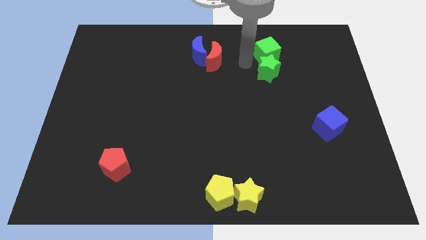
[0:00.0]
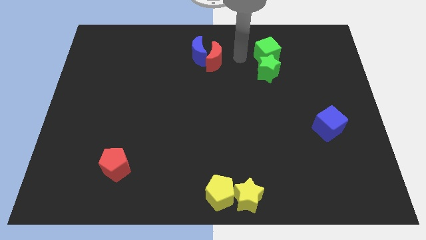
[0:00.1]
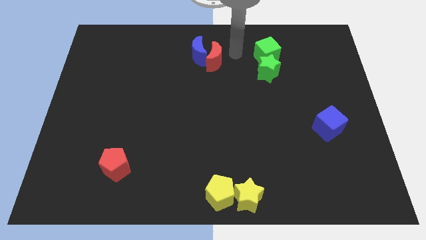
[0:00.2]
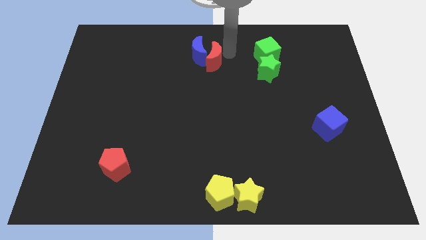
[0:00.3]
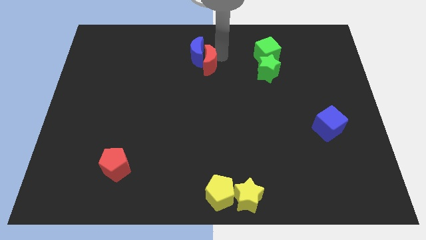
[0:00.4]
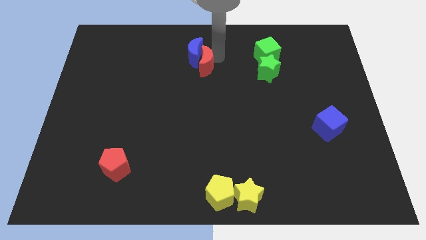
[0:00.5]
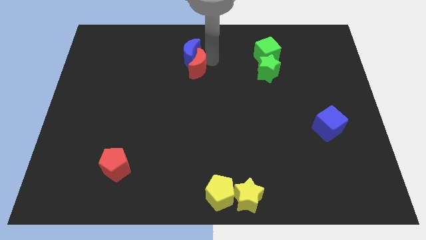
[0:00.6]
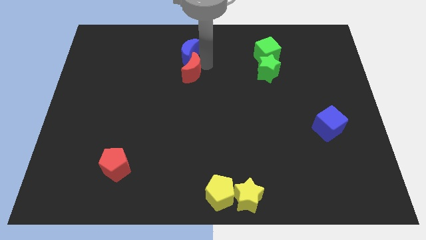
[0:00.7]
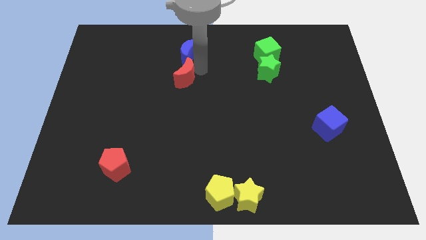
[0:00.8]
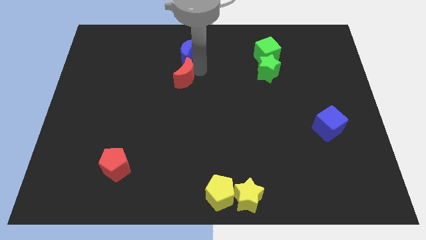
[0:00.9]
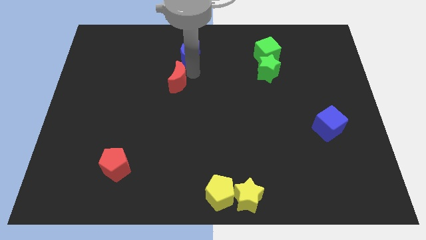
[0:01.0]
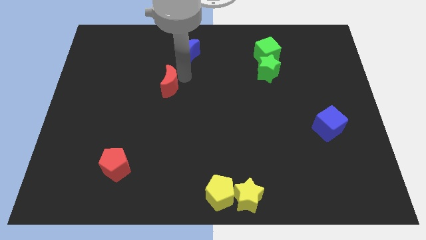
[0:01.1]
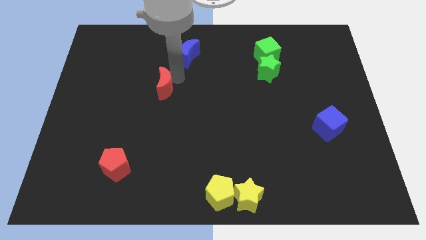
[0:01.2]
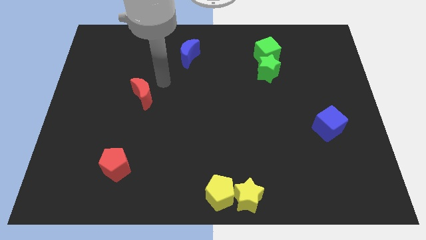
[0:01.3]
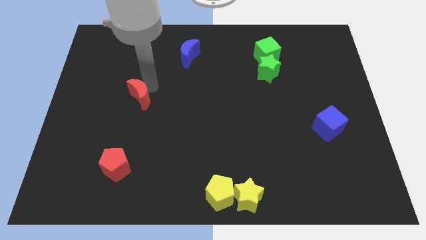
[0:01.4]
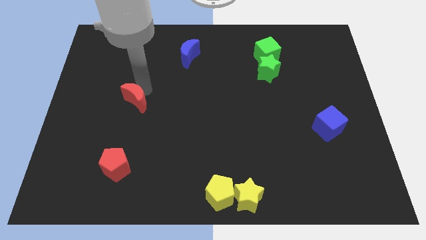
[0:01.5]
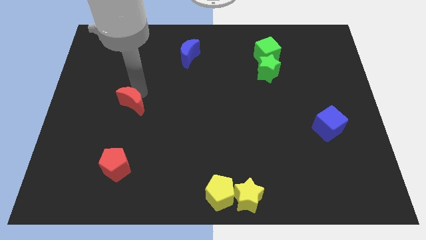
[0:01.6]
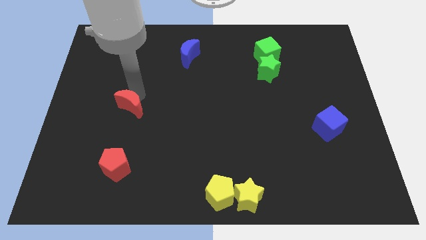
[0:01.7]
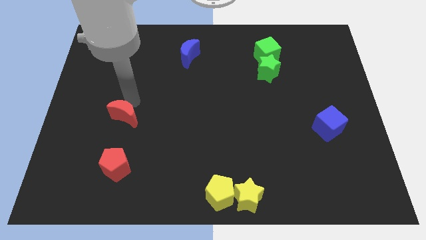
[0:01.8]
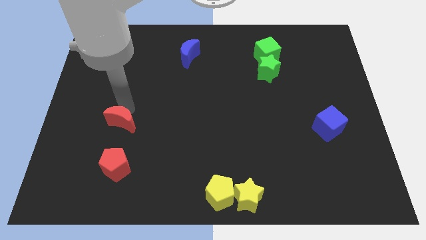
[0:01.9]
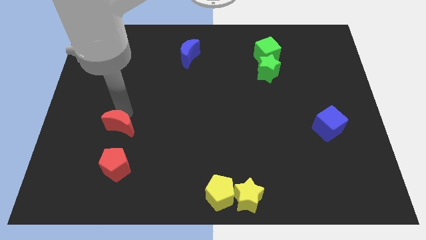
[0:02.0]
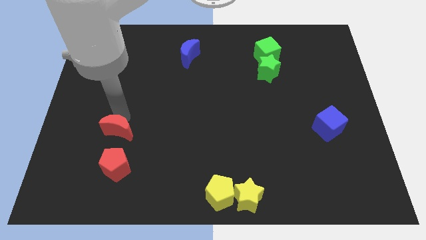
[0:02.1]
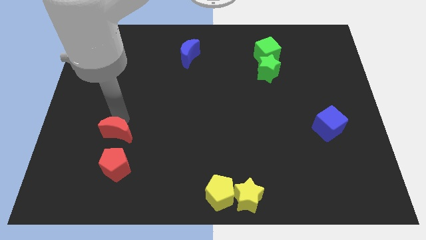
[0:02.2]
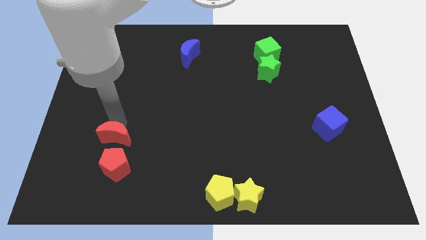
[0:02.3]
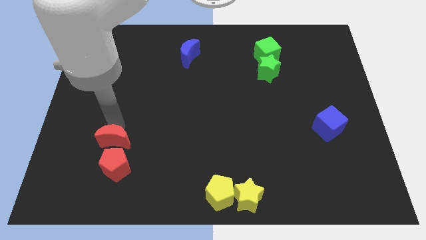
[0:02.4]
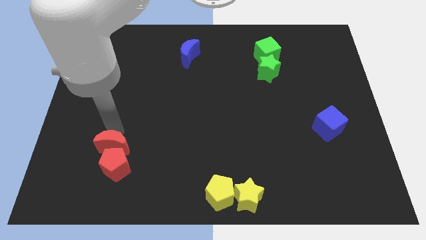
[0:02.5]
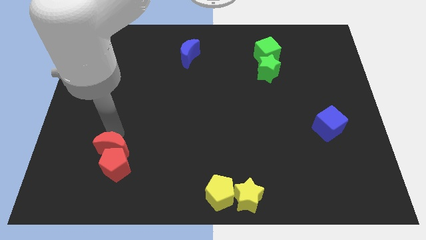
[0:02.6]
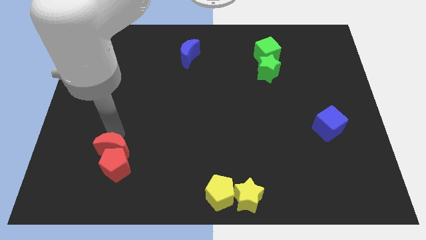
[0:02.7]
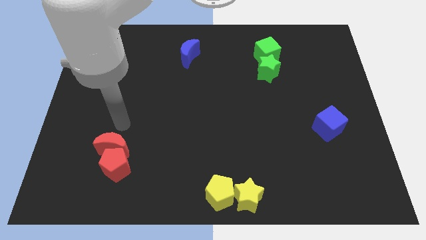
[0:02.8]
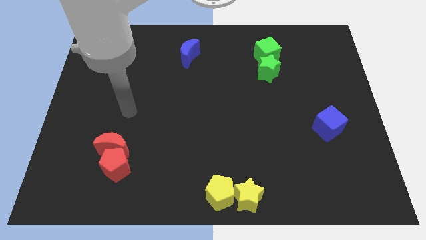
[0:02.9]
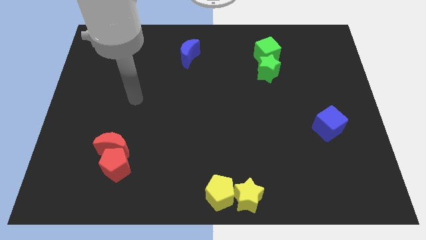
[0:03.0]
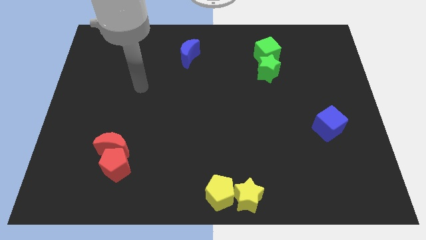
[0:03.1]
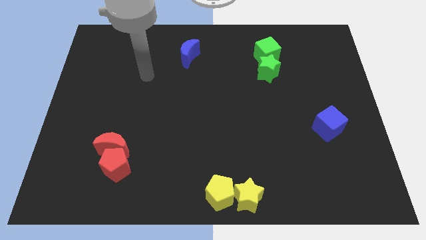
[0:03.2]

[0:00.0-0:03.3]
push the red crescent into the red pentagon

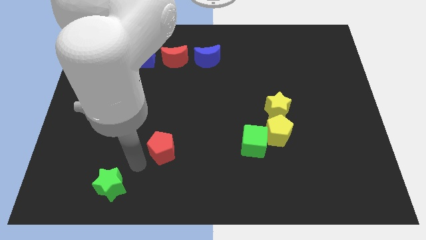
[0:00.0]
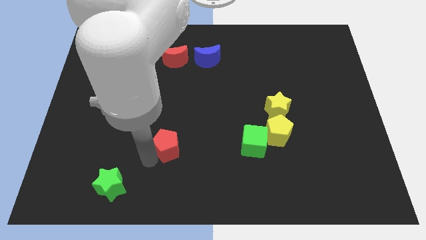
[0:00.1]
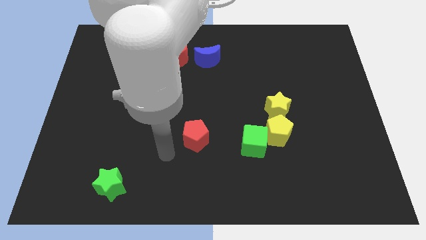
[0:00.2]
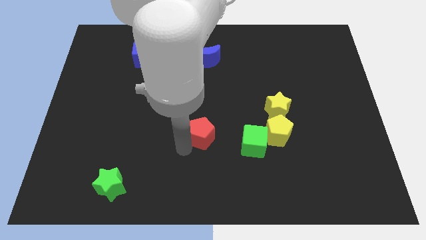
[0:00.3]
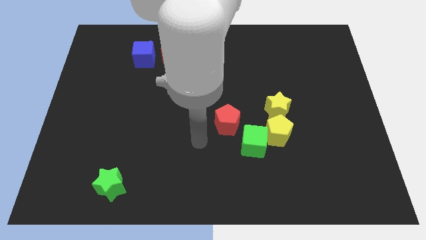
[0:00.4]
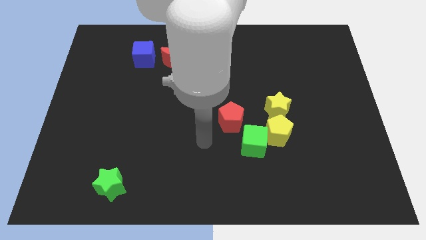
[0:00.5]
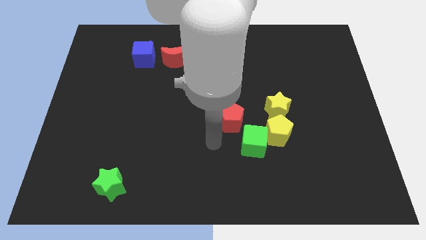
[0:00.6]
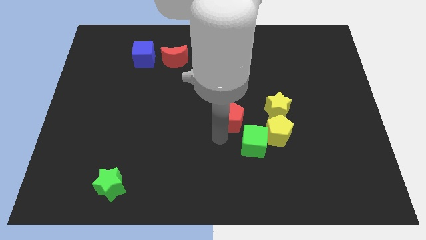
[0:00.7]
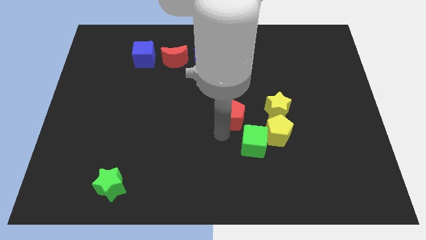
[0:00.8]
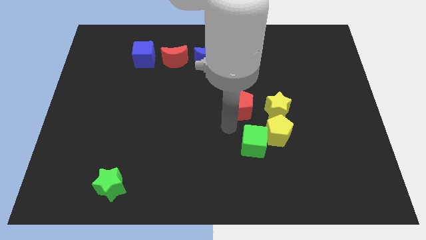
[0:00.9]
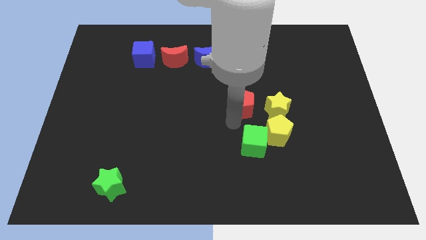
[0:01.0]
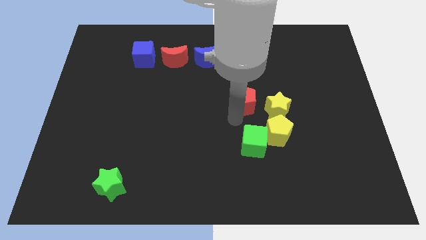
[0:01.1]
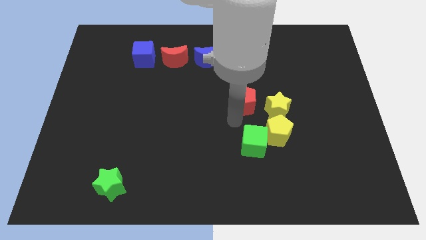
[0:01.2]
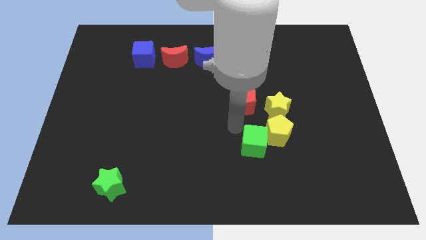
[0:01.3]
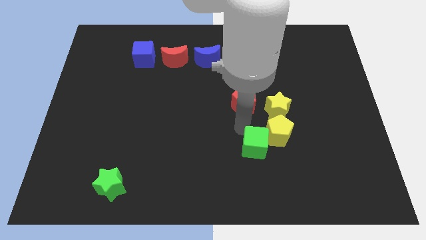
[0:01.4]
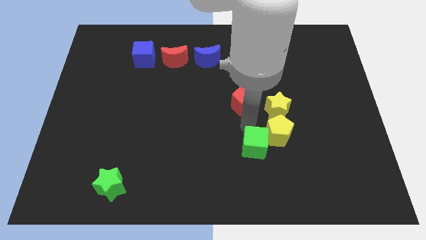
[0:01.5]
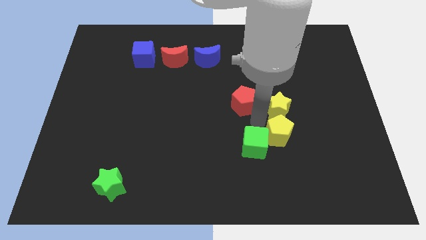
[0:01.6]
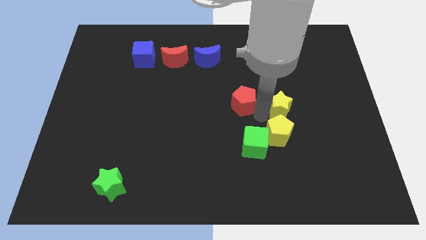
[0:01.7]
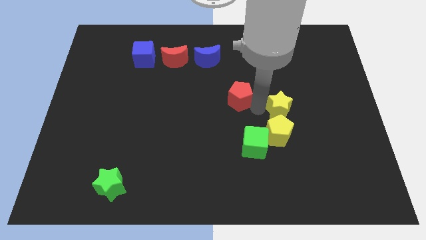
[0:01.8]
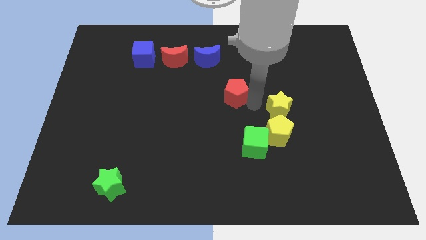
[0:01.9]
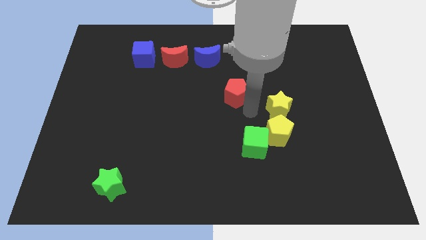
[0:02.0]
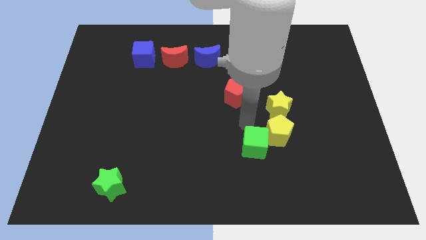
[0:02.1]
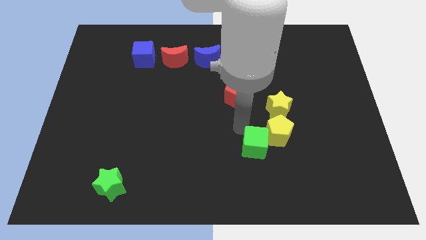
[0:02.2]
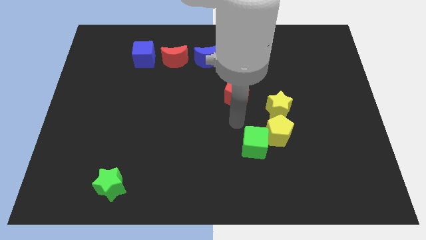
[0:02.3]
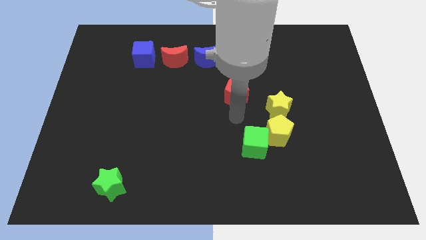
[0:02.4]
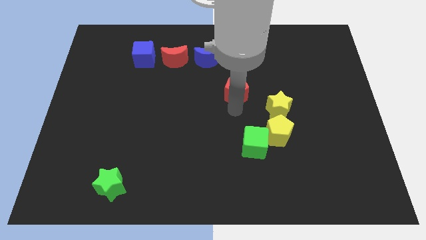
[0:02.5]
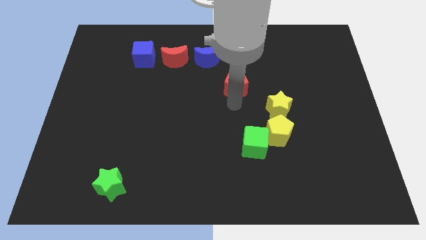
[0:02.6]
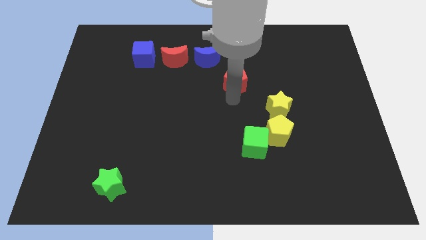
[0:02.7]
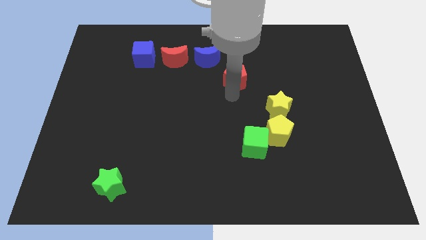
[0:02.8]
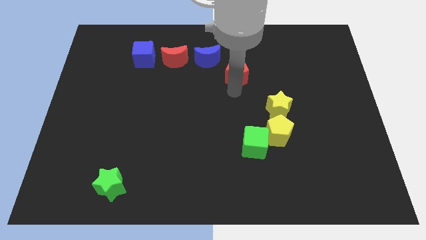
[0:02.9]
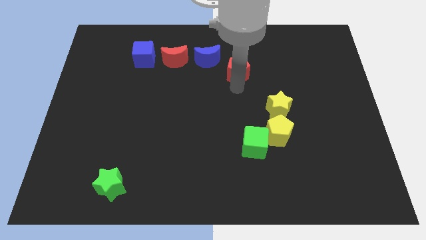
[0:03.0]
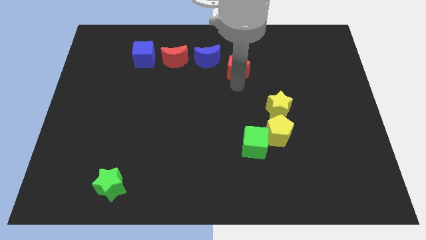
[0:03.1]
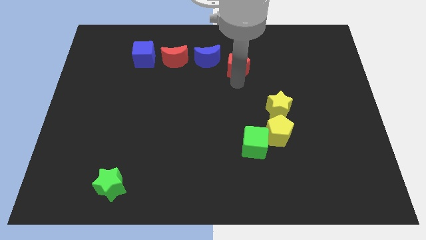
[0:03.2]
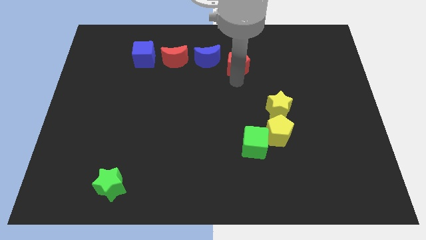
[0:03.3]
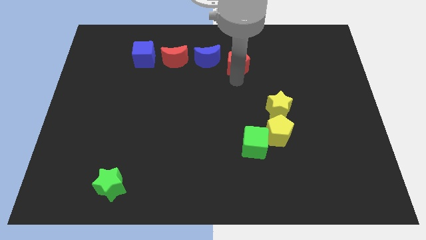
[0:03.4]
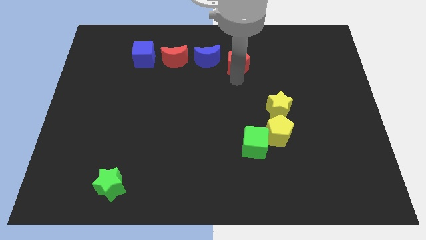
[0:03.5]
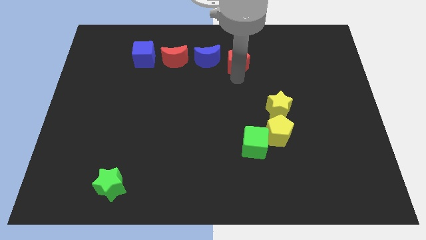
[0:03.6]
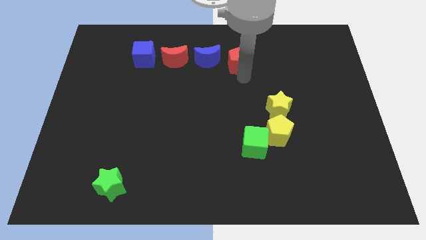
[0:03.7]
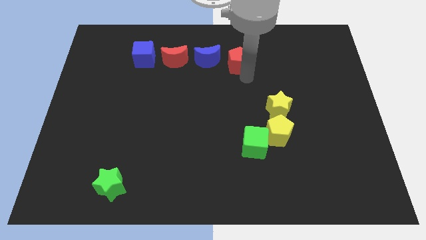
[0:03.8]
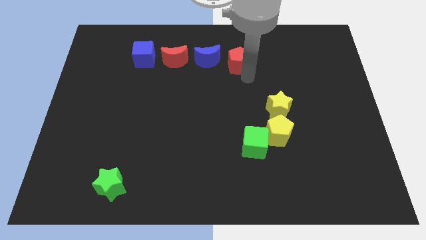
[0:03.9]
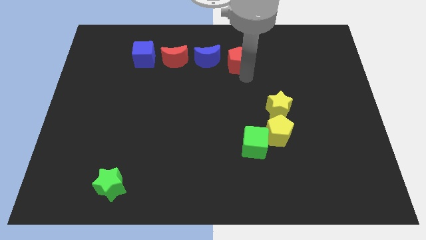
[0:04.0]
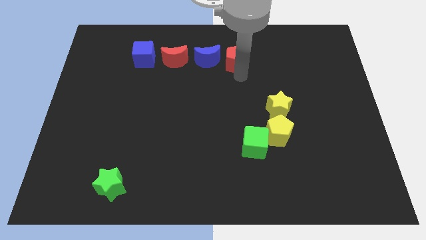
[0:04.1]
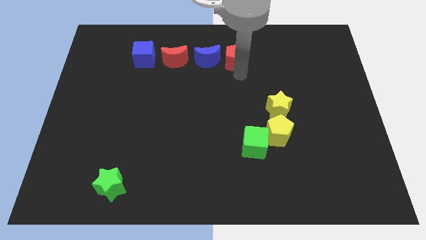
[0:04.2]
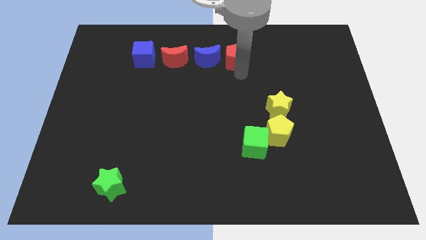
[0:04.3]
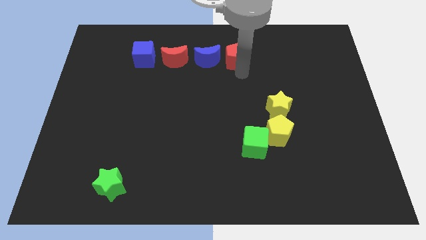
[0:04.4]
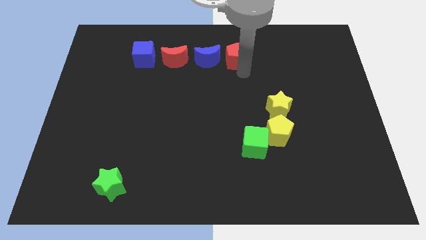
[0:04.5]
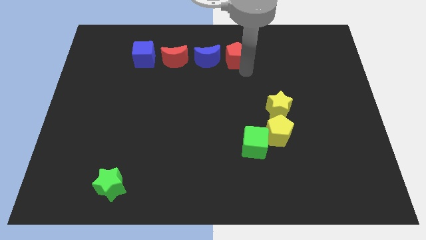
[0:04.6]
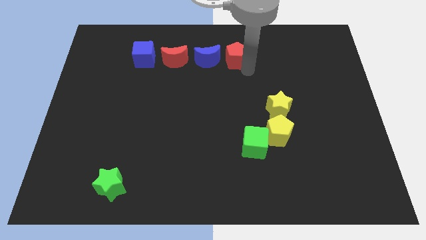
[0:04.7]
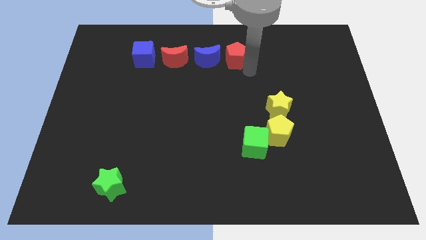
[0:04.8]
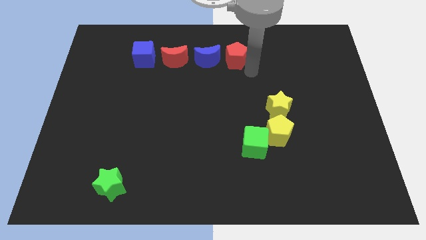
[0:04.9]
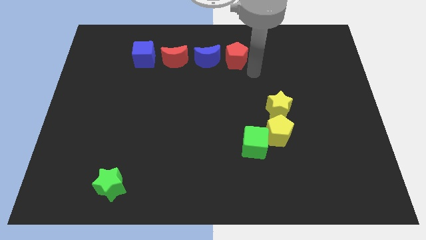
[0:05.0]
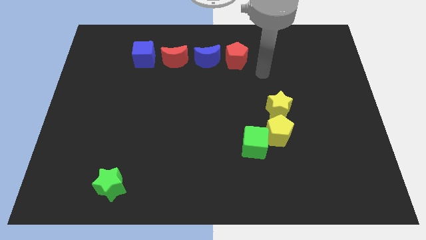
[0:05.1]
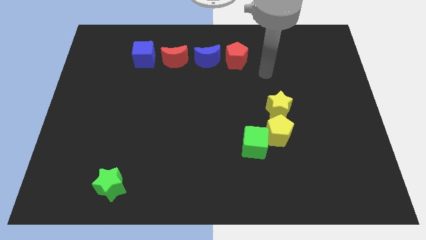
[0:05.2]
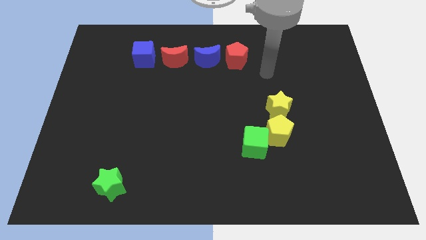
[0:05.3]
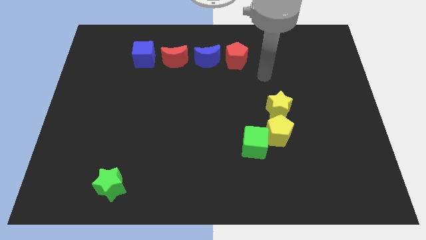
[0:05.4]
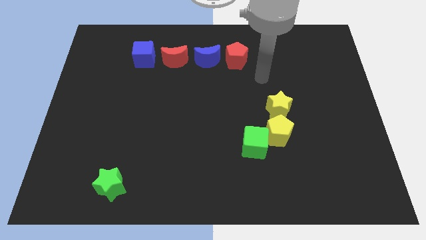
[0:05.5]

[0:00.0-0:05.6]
adjust the red pentagon to form a horizontal line with blue blocks and the red crescent

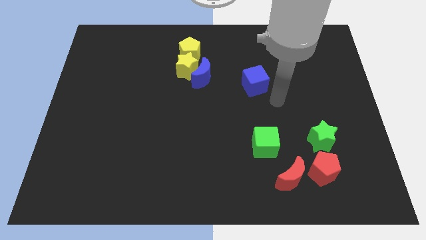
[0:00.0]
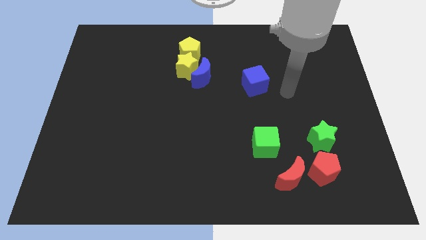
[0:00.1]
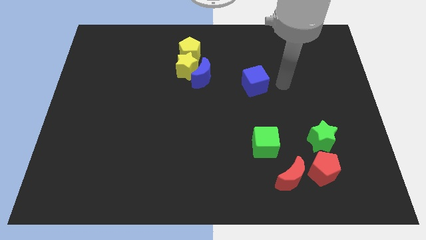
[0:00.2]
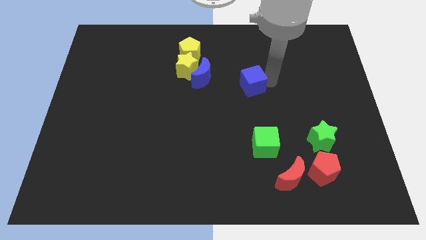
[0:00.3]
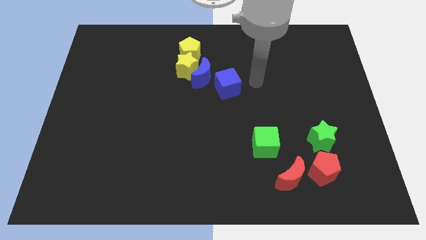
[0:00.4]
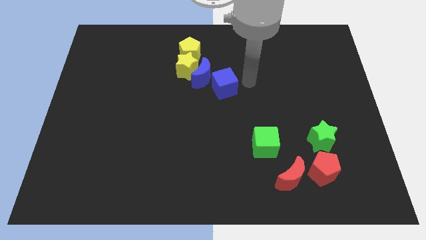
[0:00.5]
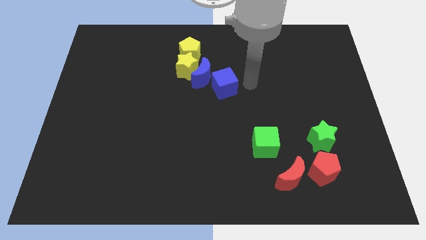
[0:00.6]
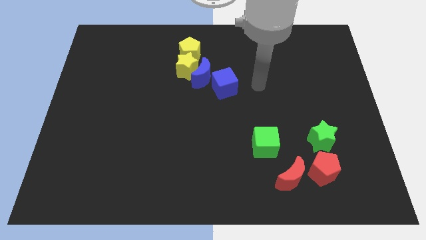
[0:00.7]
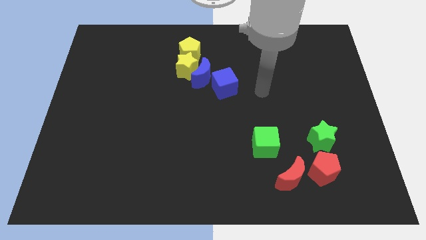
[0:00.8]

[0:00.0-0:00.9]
push the blue cube to the right of the blue moon
